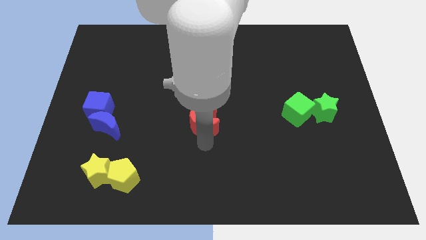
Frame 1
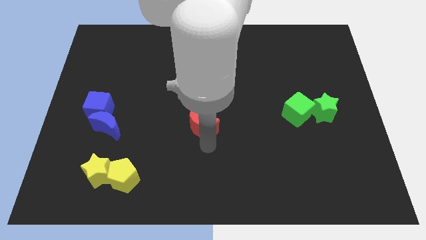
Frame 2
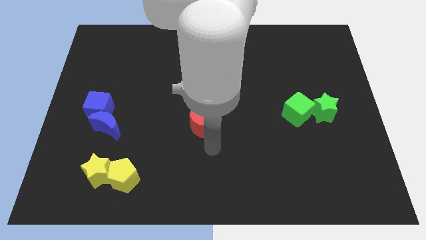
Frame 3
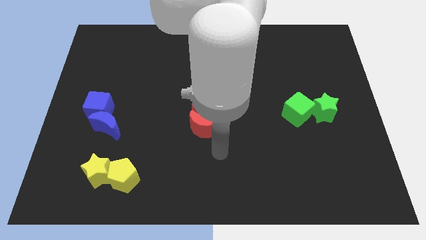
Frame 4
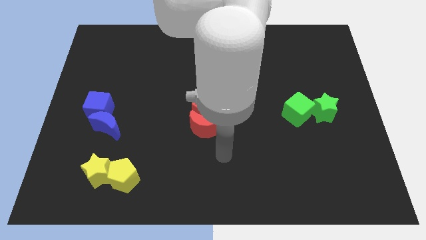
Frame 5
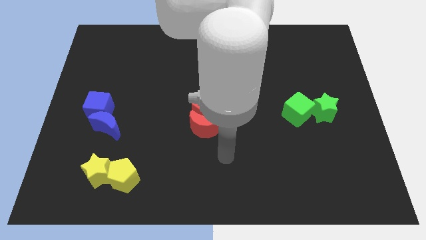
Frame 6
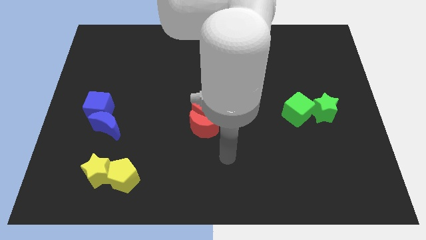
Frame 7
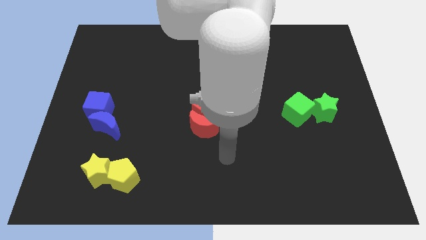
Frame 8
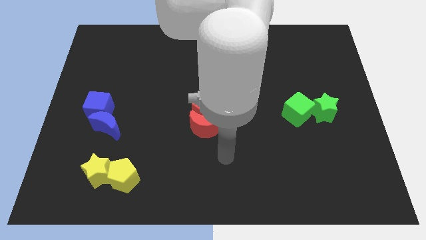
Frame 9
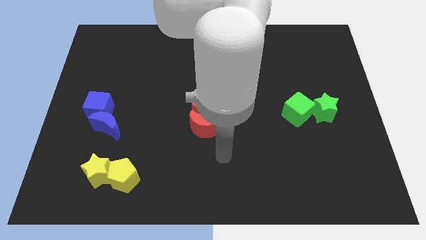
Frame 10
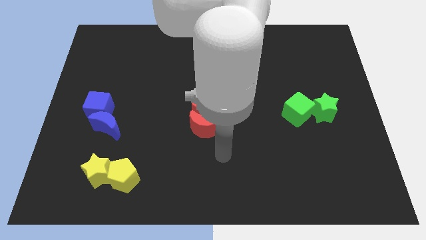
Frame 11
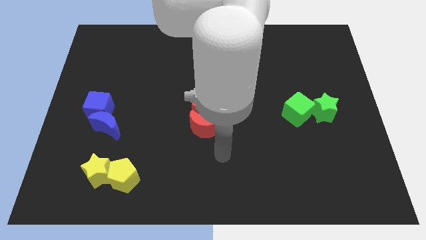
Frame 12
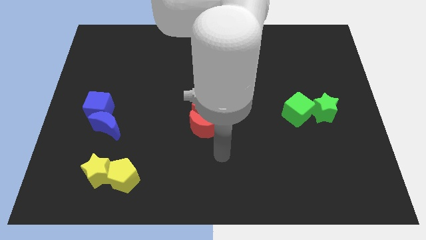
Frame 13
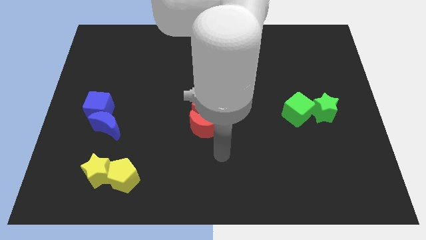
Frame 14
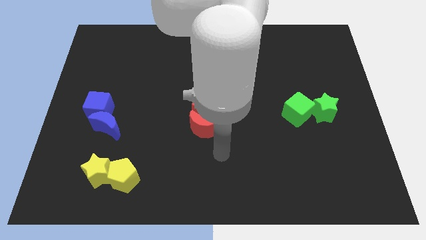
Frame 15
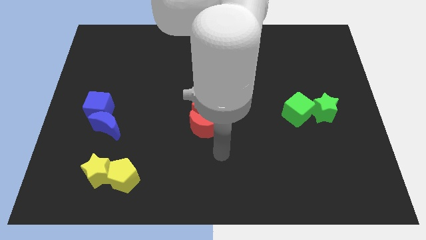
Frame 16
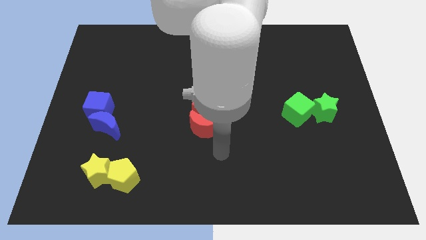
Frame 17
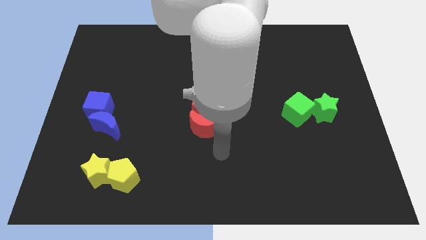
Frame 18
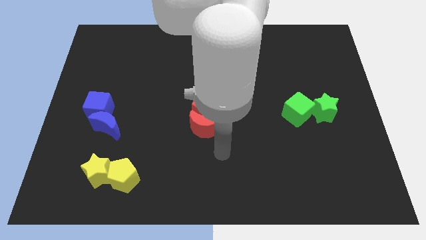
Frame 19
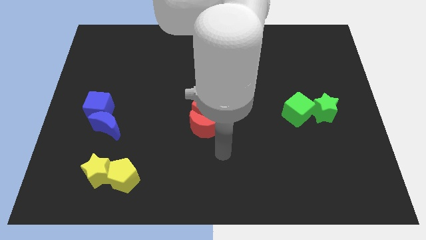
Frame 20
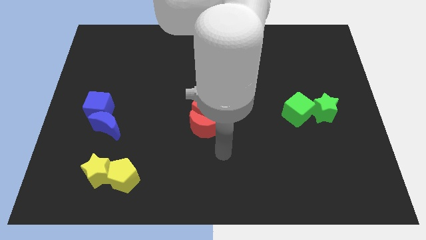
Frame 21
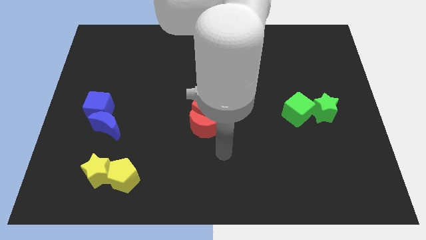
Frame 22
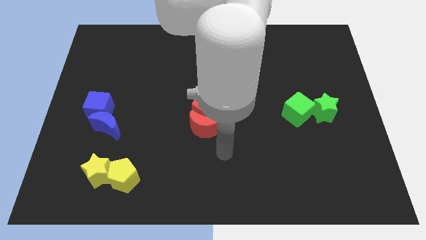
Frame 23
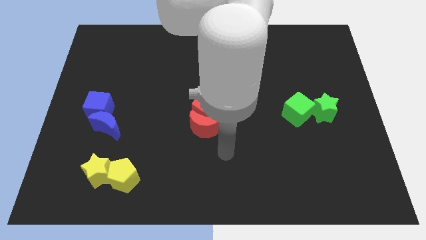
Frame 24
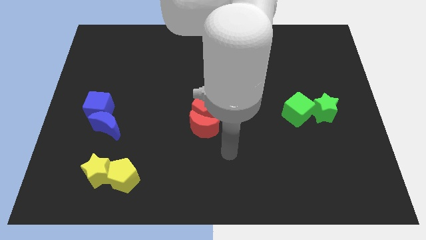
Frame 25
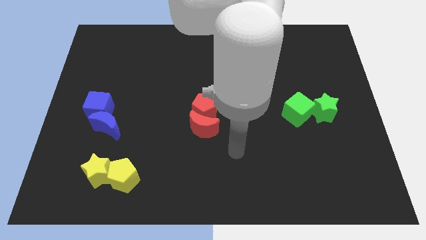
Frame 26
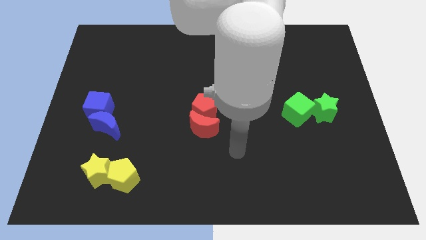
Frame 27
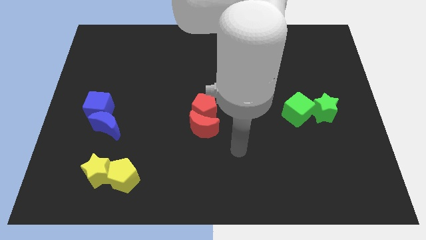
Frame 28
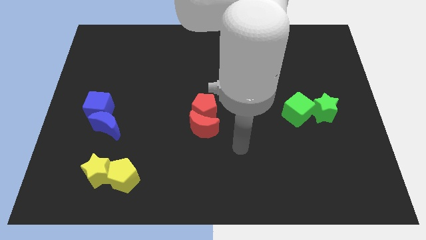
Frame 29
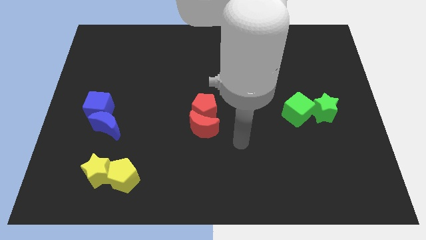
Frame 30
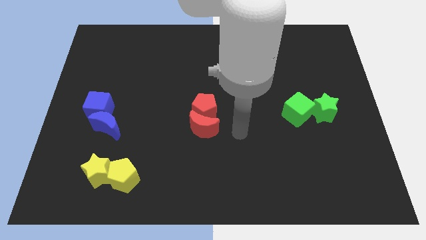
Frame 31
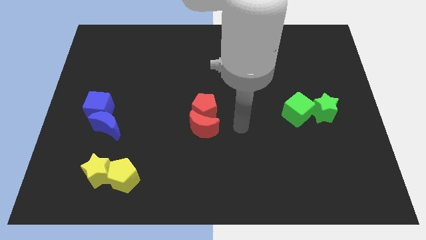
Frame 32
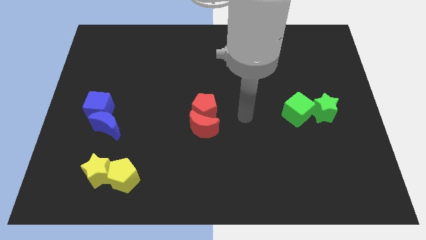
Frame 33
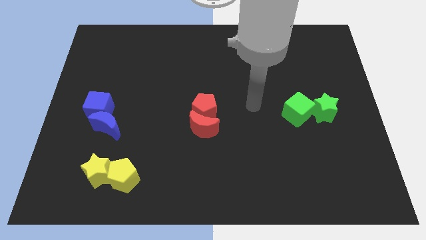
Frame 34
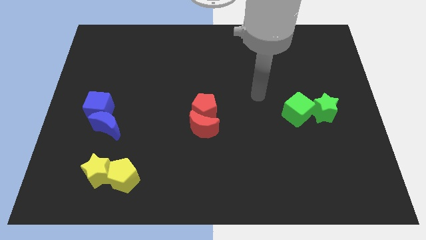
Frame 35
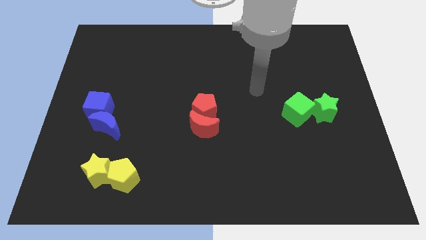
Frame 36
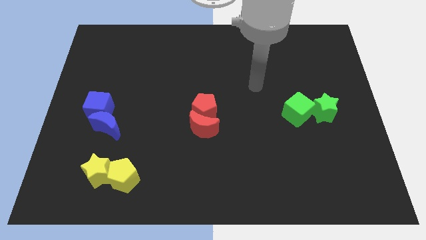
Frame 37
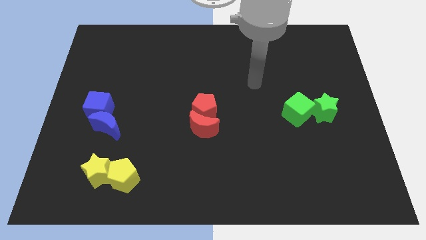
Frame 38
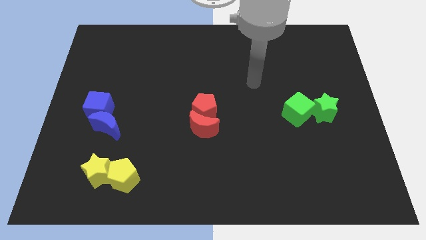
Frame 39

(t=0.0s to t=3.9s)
go away from the bottom side of the red moon

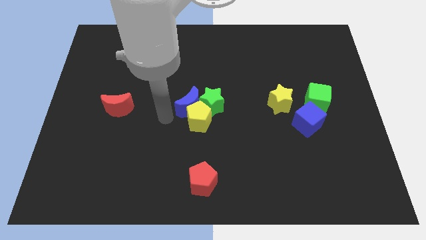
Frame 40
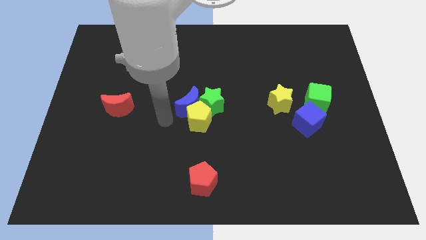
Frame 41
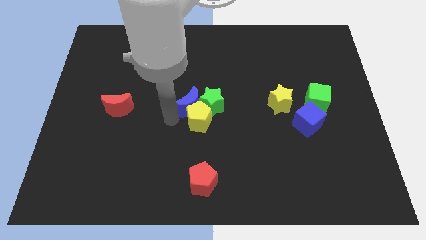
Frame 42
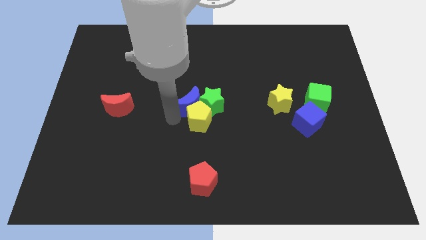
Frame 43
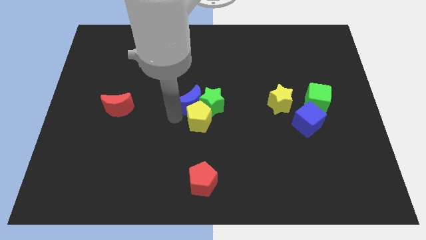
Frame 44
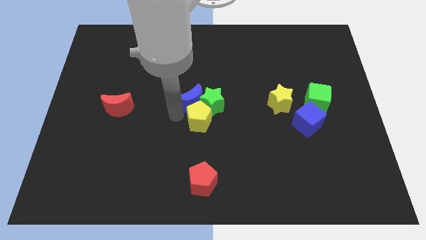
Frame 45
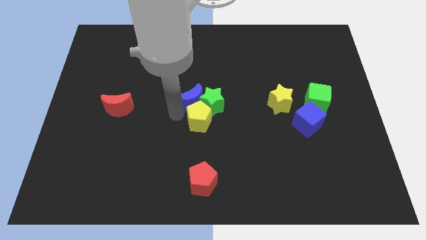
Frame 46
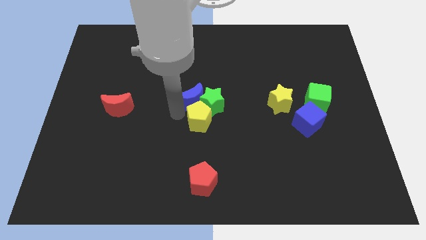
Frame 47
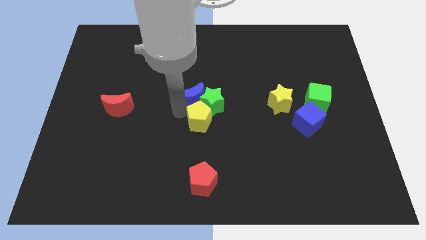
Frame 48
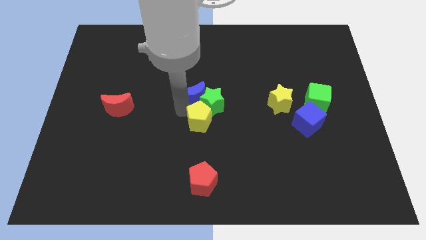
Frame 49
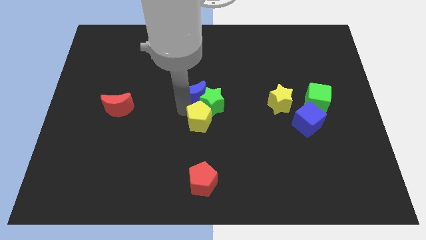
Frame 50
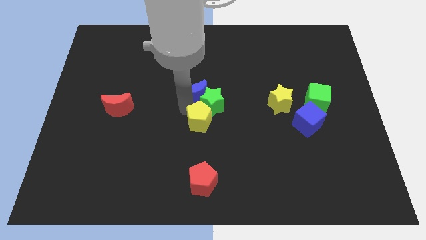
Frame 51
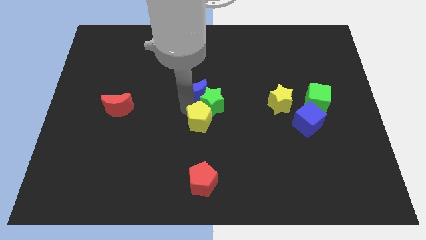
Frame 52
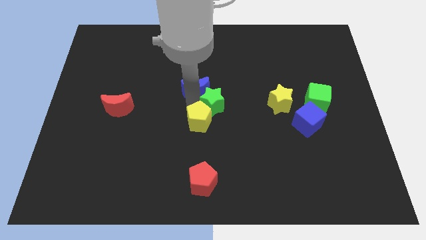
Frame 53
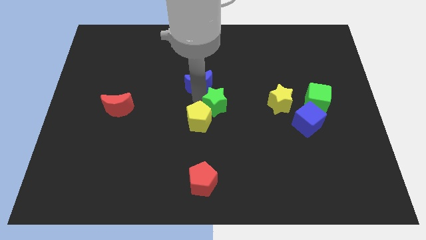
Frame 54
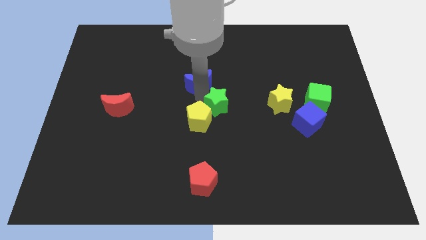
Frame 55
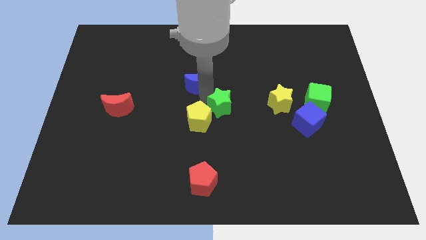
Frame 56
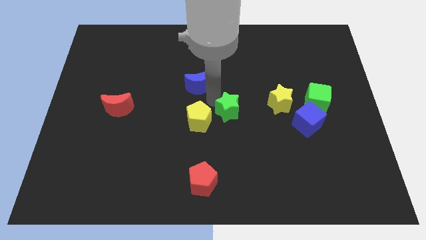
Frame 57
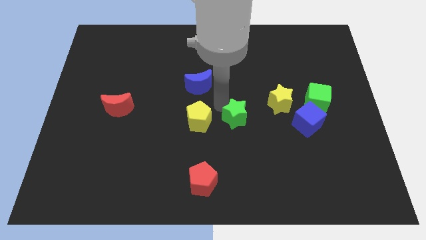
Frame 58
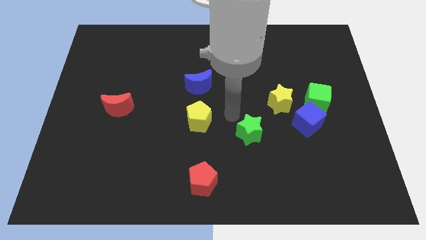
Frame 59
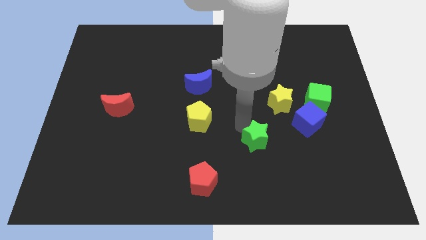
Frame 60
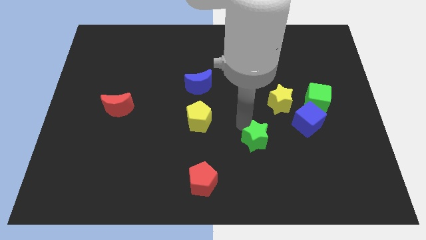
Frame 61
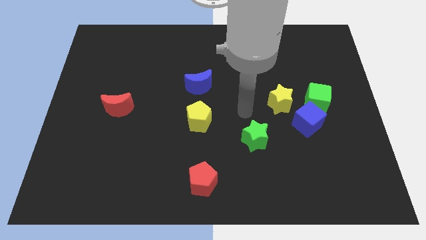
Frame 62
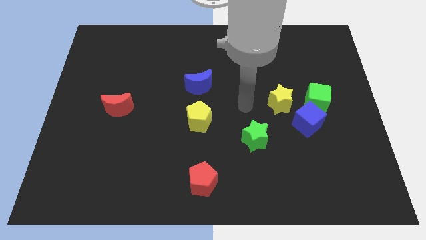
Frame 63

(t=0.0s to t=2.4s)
move the green star diagonally right of the yellow pentagon

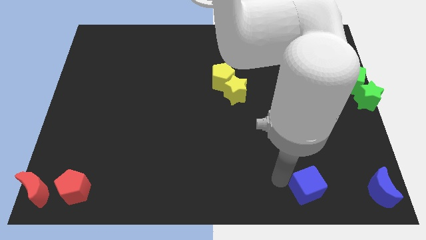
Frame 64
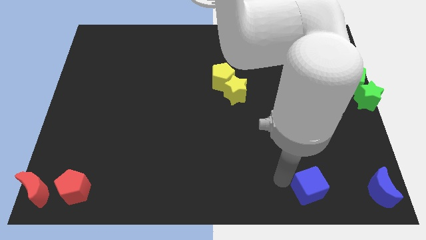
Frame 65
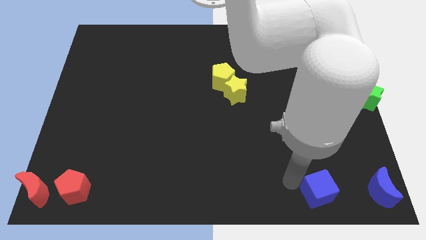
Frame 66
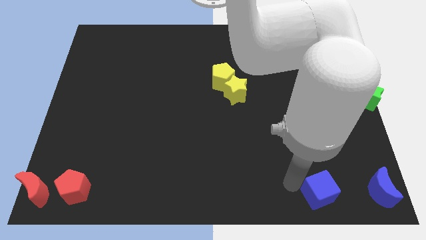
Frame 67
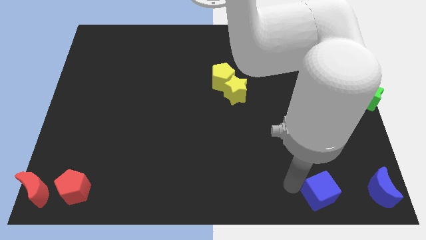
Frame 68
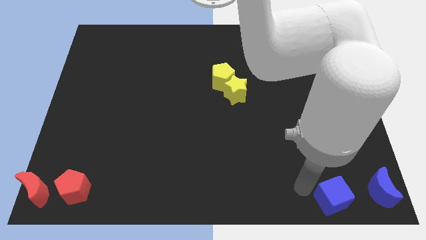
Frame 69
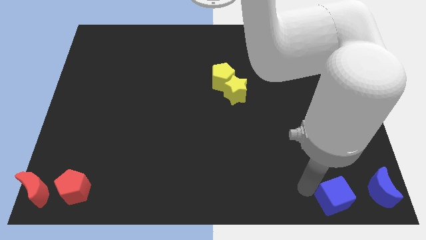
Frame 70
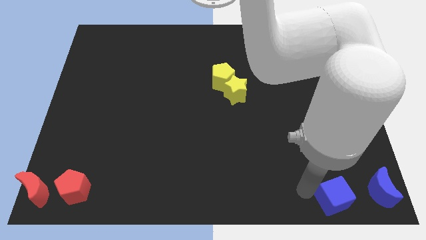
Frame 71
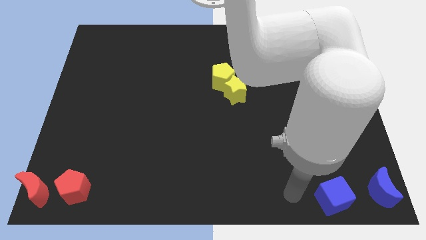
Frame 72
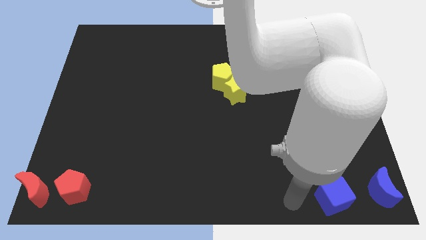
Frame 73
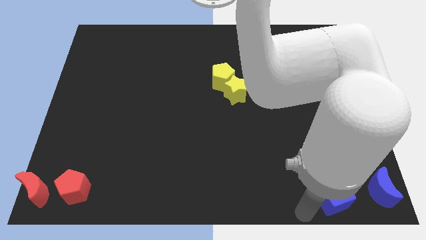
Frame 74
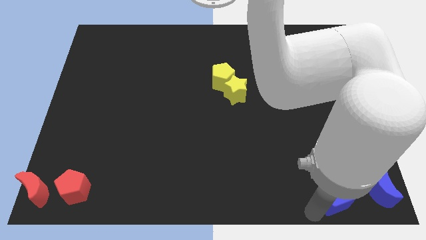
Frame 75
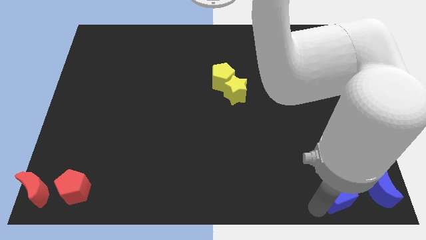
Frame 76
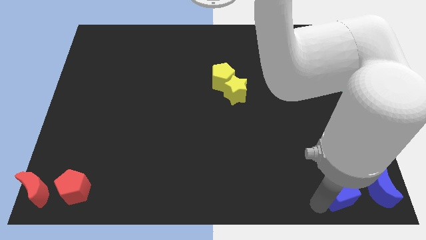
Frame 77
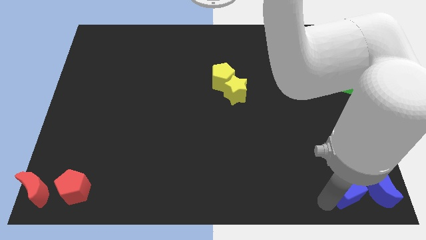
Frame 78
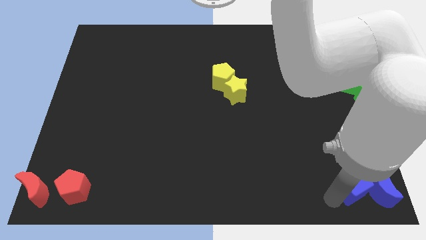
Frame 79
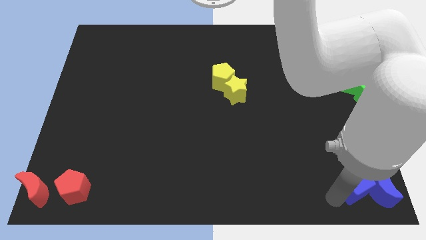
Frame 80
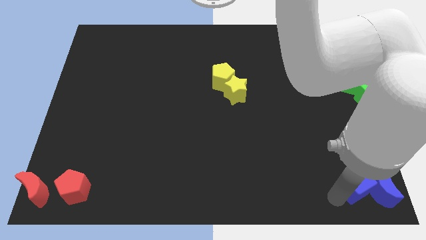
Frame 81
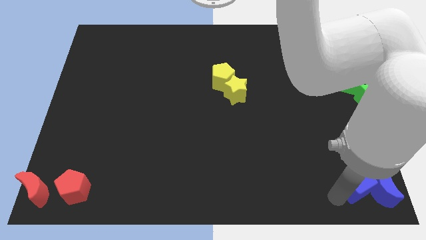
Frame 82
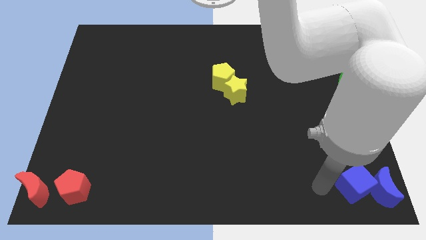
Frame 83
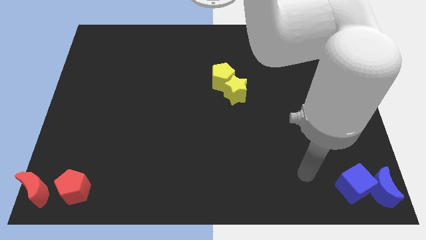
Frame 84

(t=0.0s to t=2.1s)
move the blue cube into the blue crescent

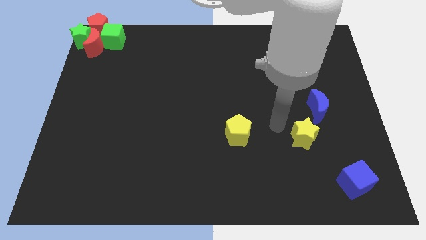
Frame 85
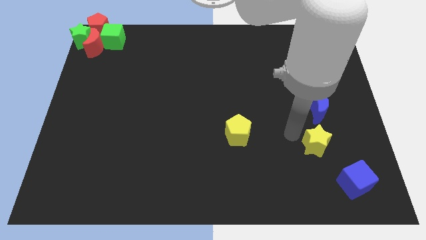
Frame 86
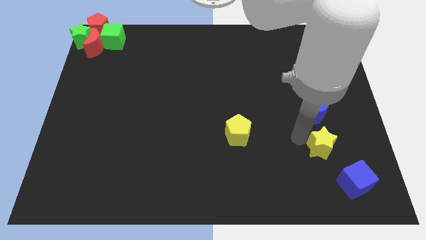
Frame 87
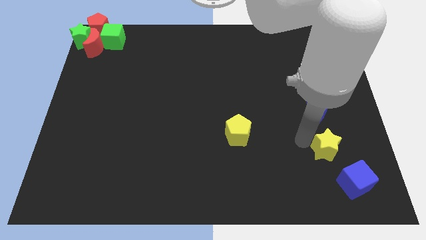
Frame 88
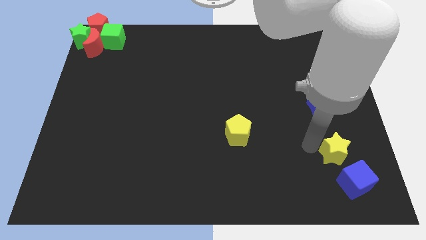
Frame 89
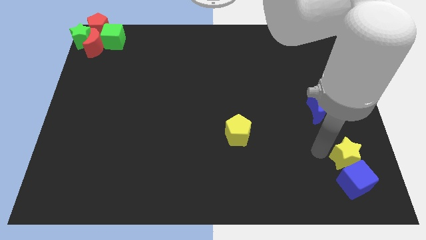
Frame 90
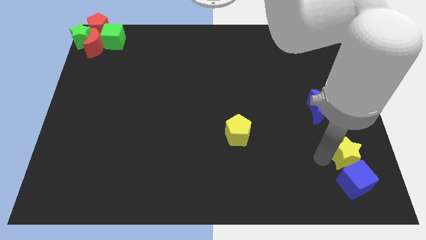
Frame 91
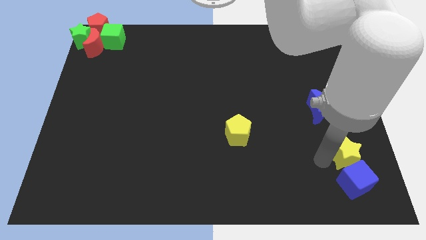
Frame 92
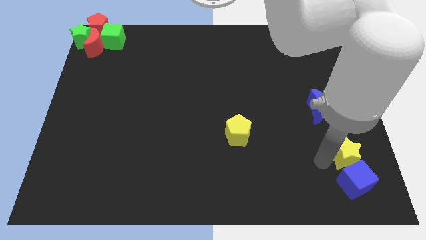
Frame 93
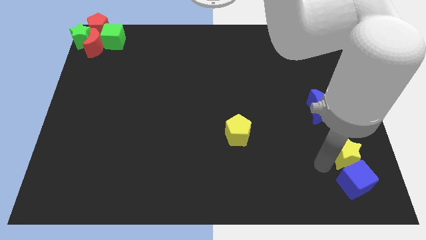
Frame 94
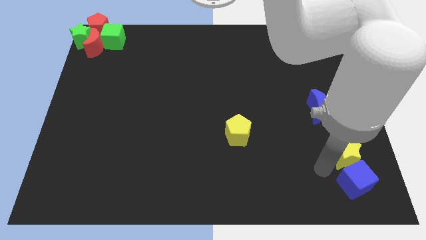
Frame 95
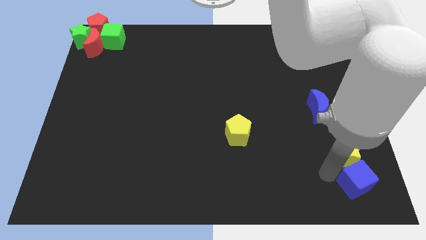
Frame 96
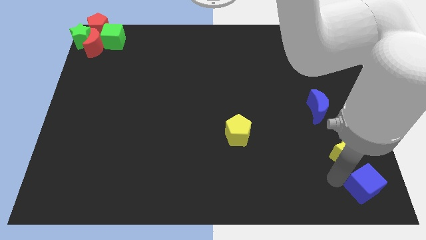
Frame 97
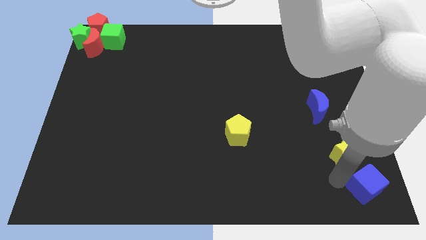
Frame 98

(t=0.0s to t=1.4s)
place the yellow star on top of the blue cube
